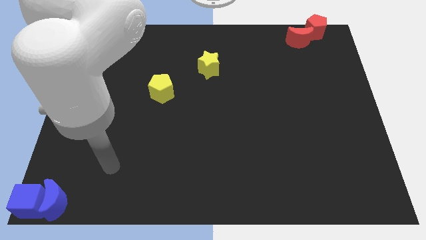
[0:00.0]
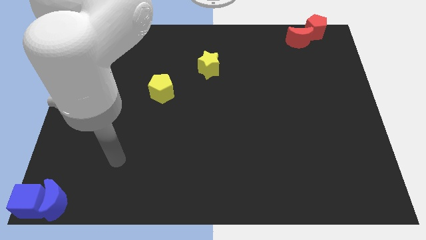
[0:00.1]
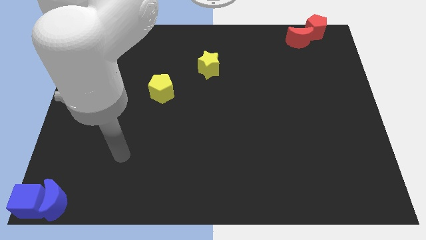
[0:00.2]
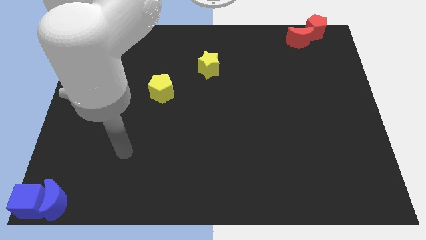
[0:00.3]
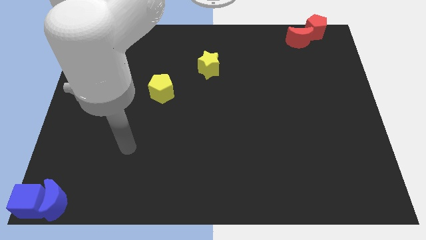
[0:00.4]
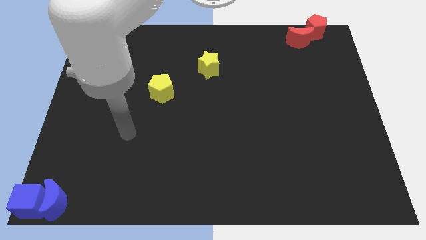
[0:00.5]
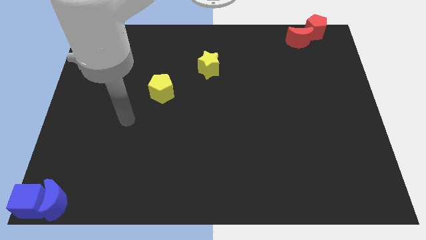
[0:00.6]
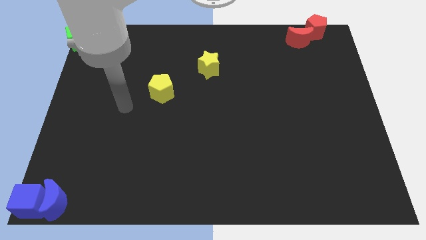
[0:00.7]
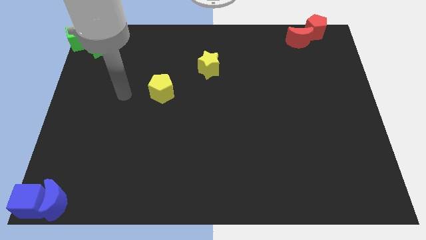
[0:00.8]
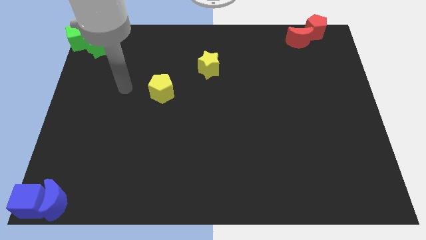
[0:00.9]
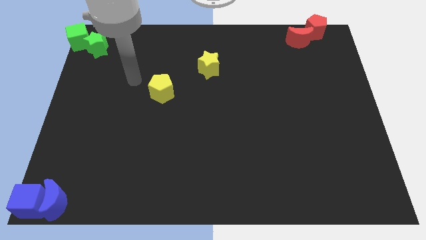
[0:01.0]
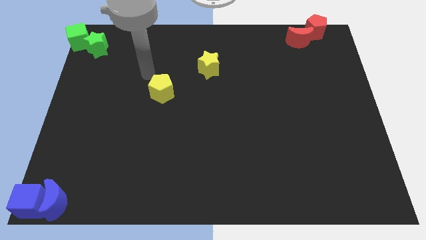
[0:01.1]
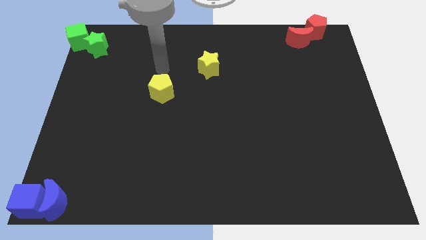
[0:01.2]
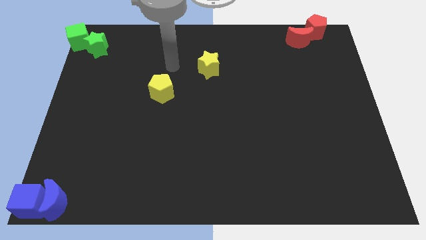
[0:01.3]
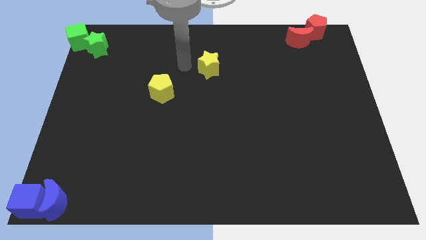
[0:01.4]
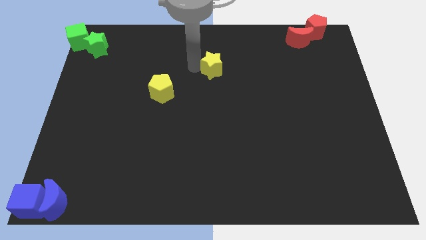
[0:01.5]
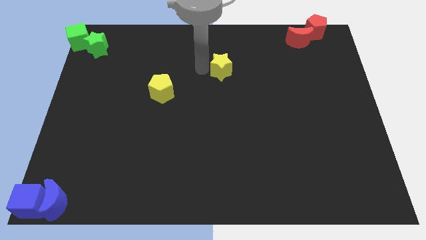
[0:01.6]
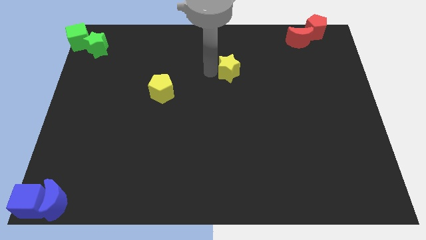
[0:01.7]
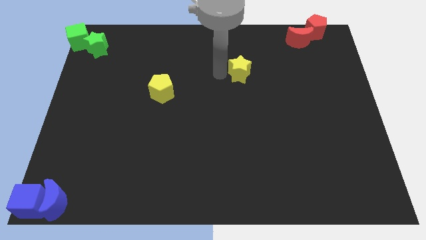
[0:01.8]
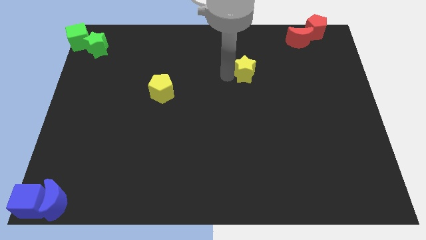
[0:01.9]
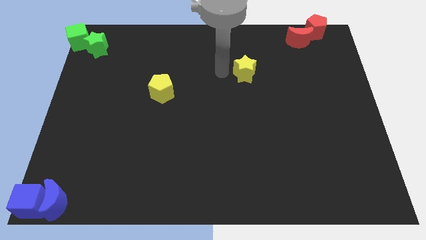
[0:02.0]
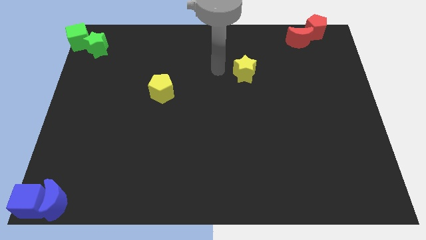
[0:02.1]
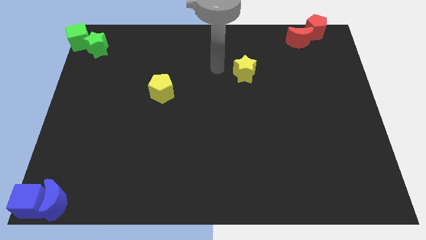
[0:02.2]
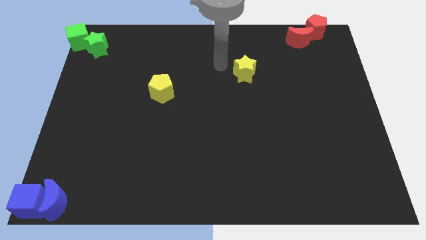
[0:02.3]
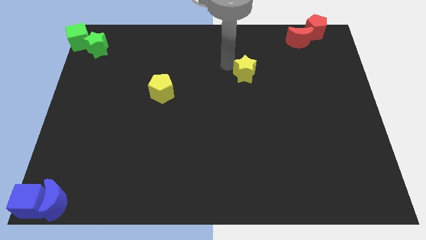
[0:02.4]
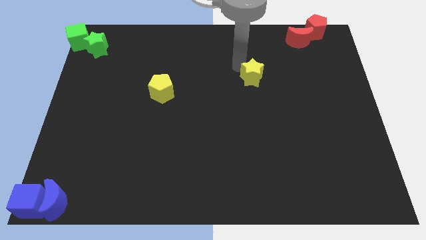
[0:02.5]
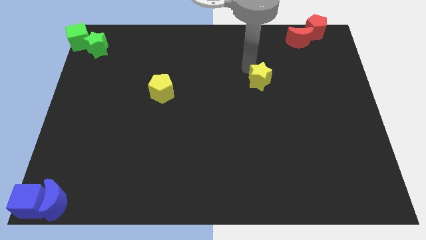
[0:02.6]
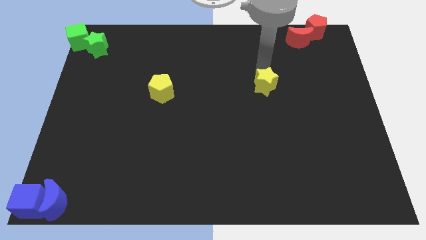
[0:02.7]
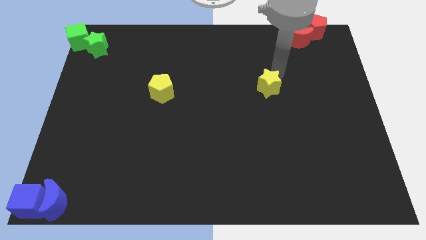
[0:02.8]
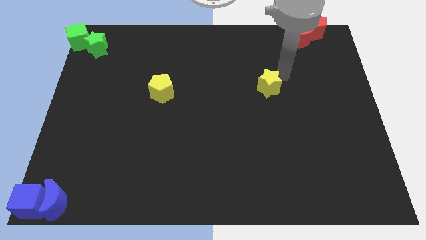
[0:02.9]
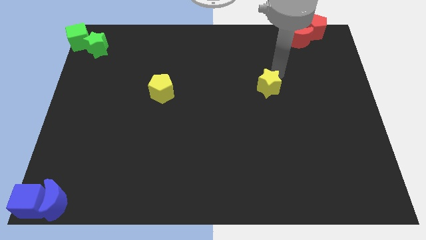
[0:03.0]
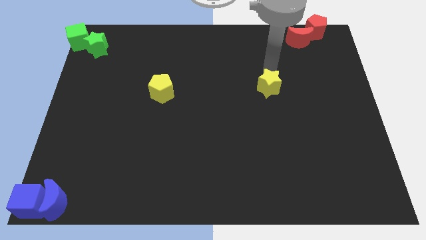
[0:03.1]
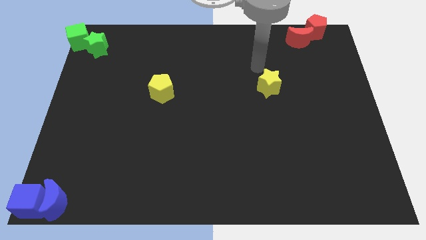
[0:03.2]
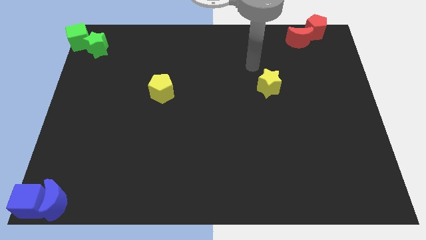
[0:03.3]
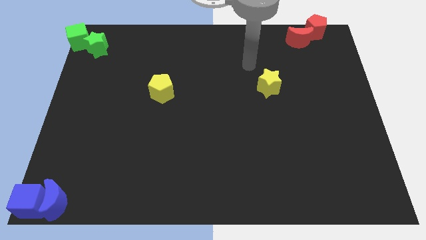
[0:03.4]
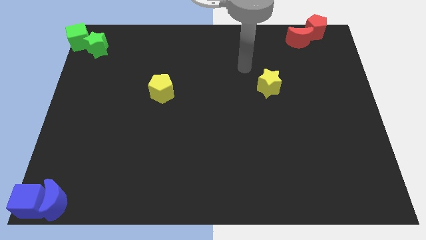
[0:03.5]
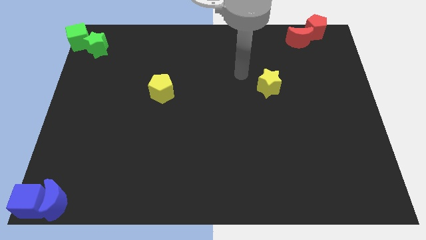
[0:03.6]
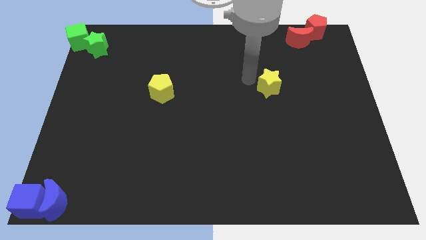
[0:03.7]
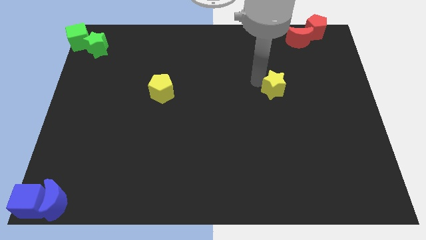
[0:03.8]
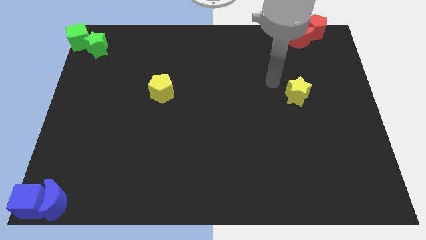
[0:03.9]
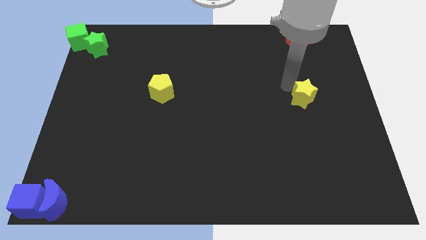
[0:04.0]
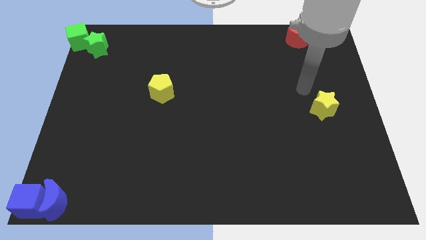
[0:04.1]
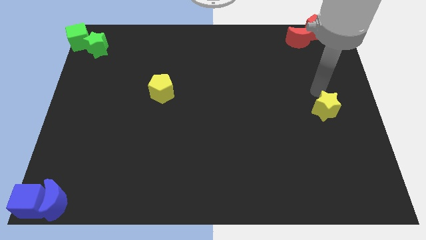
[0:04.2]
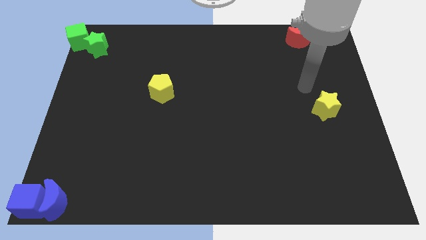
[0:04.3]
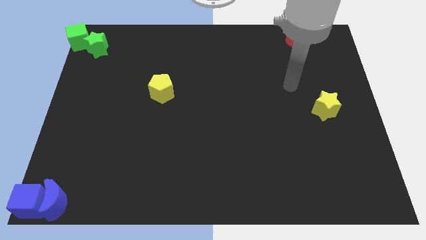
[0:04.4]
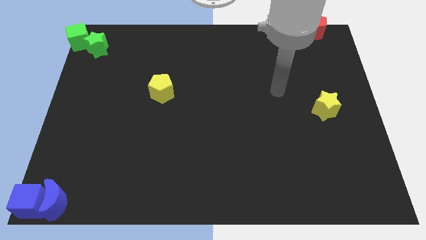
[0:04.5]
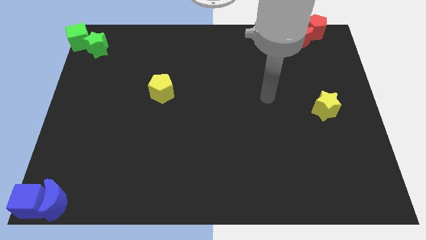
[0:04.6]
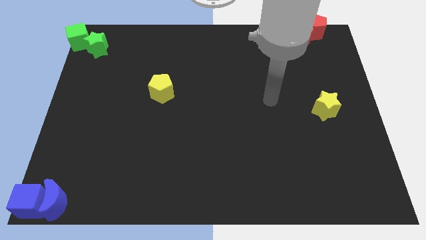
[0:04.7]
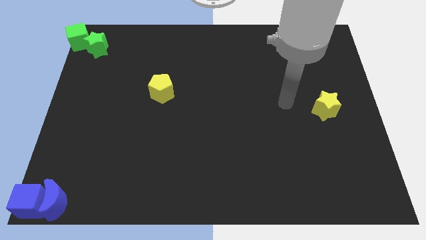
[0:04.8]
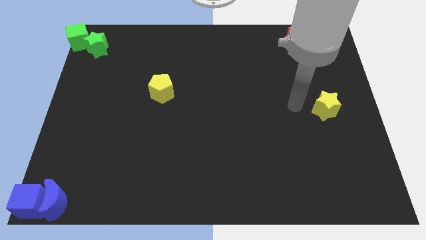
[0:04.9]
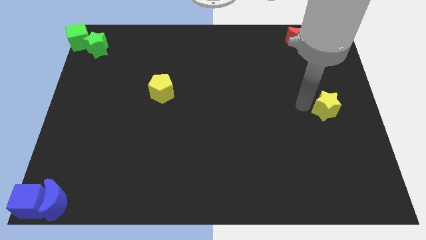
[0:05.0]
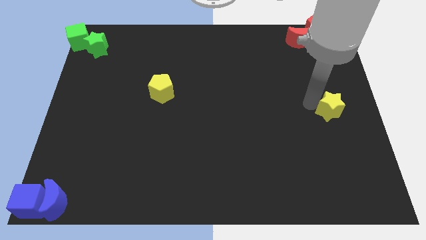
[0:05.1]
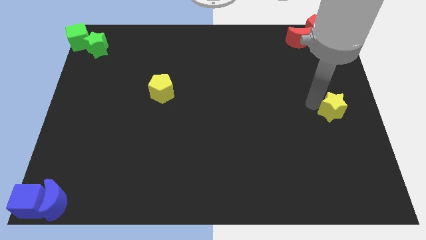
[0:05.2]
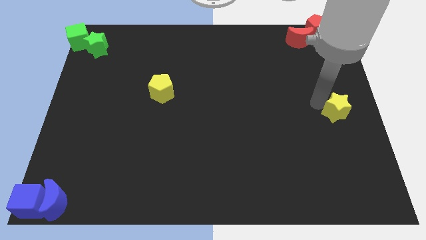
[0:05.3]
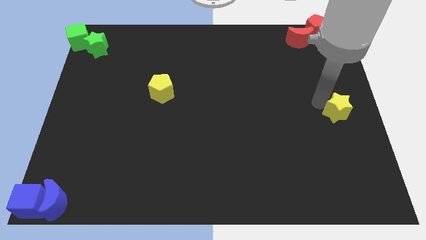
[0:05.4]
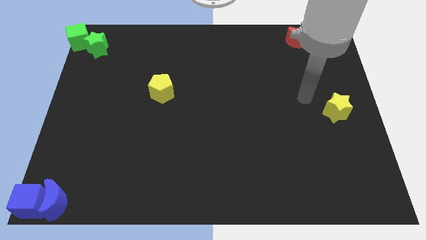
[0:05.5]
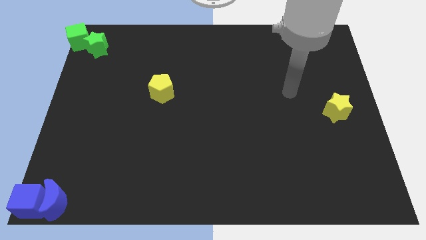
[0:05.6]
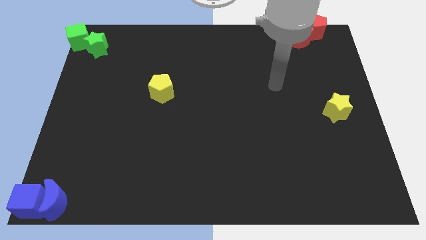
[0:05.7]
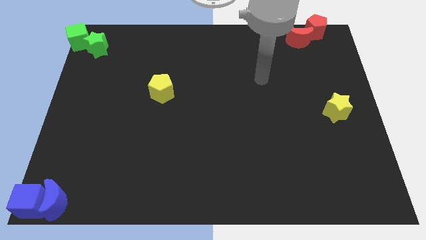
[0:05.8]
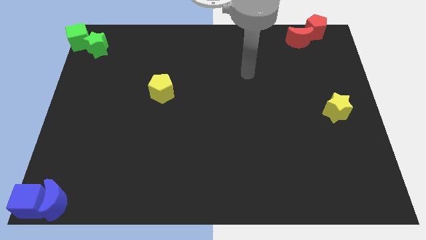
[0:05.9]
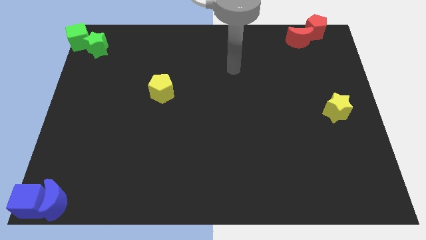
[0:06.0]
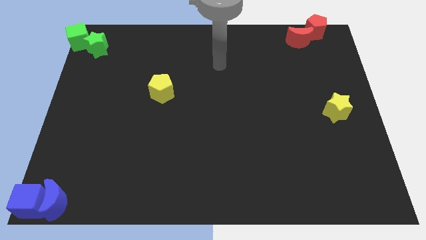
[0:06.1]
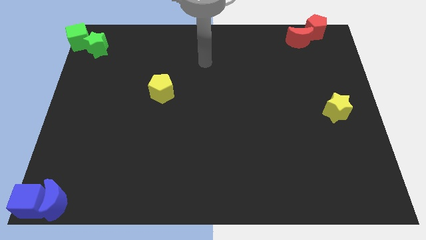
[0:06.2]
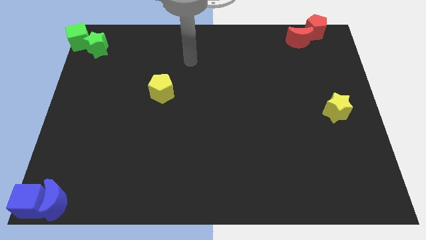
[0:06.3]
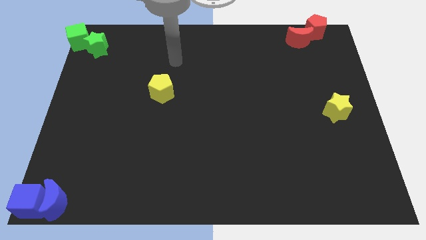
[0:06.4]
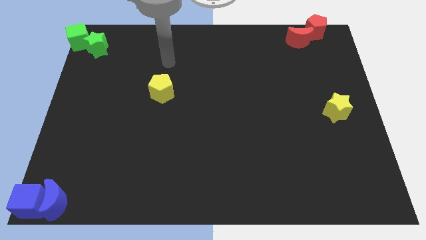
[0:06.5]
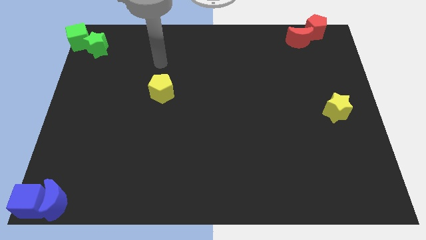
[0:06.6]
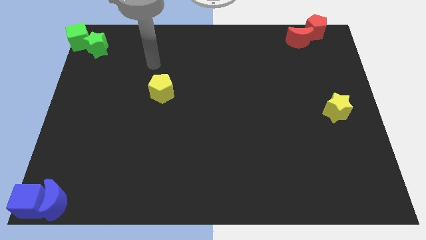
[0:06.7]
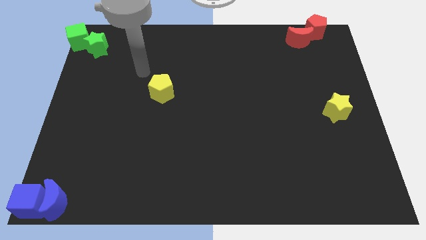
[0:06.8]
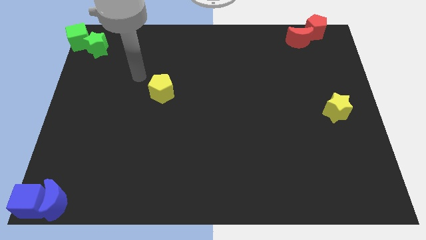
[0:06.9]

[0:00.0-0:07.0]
place the yellow star to the center right of the board

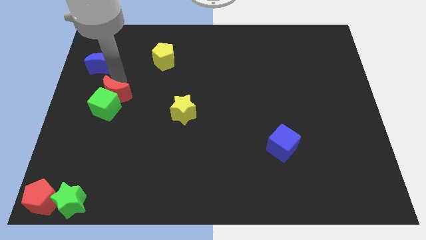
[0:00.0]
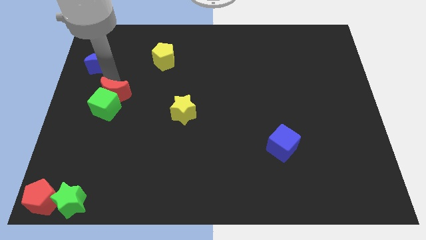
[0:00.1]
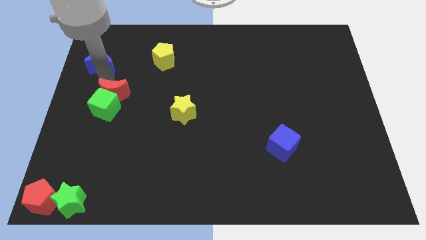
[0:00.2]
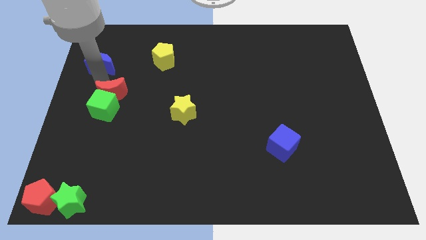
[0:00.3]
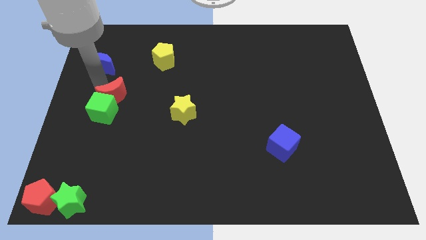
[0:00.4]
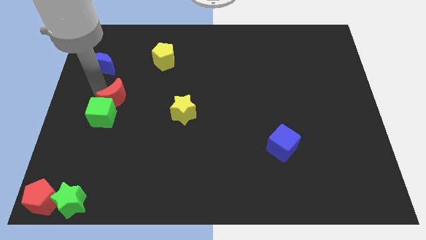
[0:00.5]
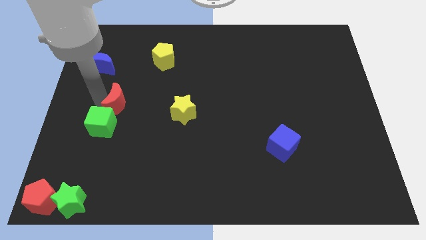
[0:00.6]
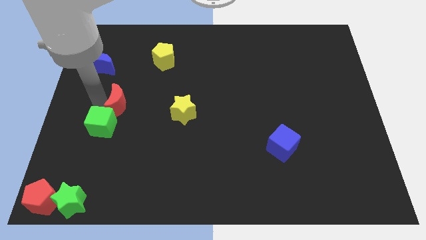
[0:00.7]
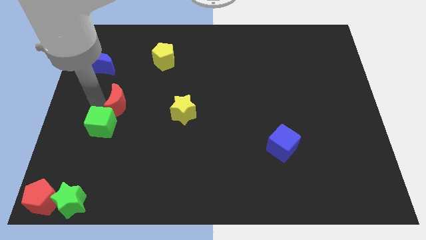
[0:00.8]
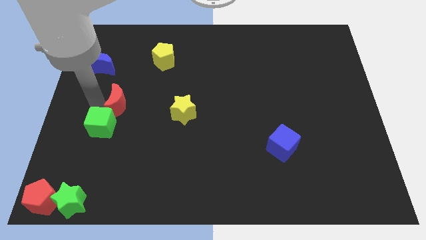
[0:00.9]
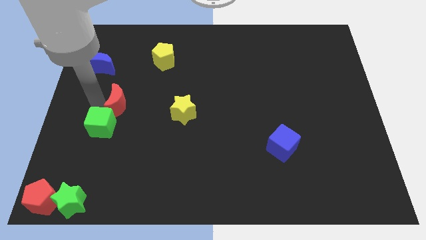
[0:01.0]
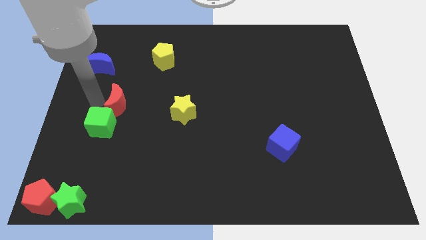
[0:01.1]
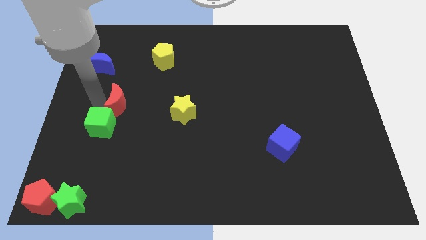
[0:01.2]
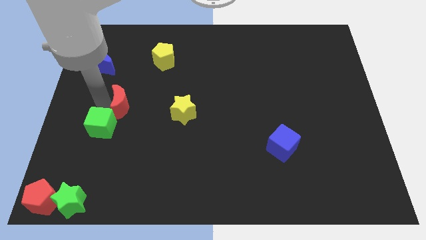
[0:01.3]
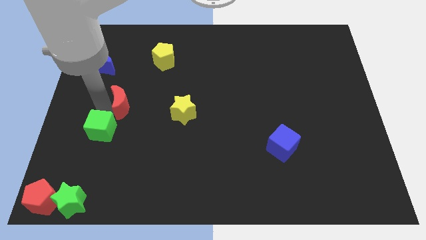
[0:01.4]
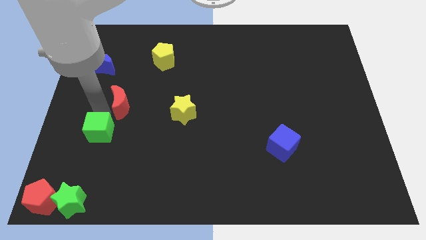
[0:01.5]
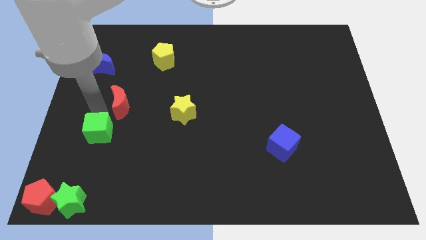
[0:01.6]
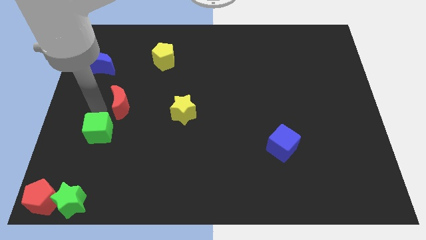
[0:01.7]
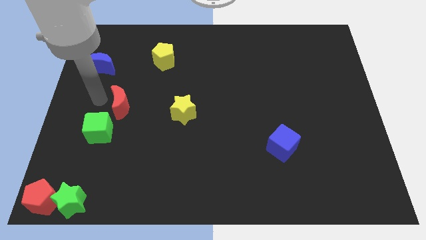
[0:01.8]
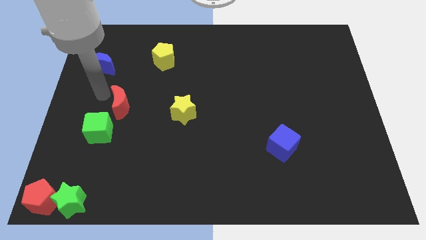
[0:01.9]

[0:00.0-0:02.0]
push the red crescent with the green cube to the left center
